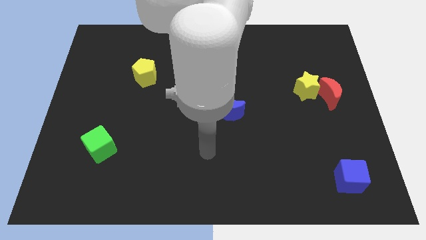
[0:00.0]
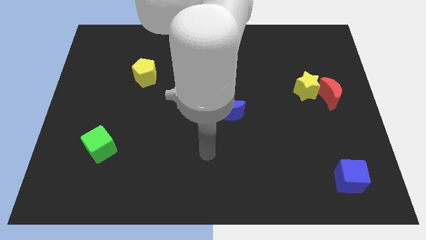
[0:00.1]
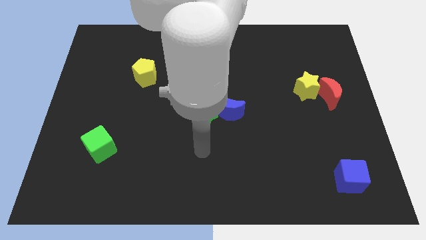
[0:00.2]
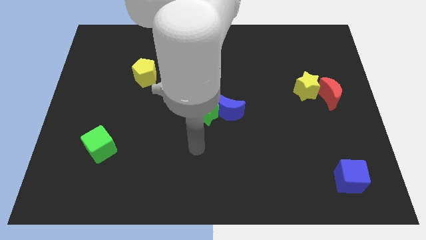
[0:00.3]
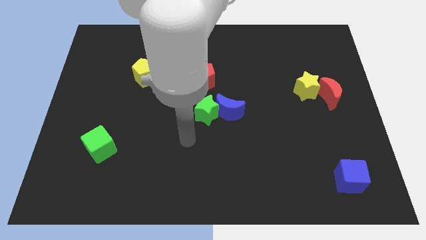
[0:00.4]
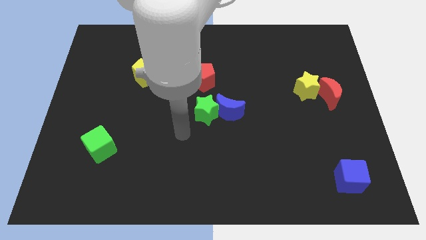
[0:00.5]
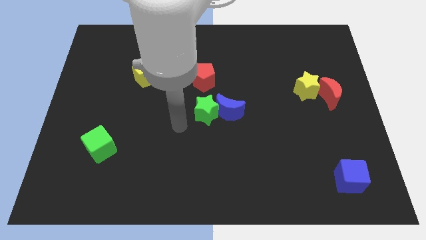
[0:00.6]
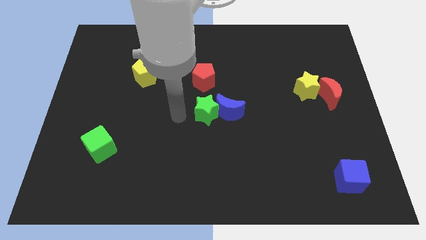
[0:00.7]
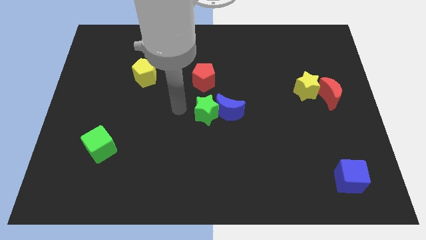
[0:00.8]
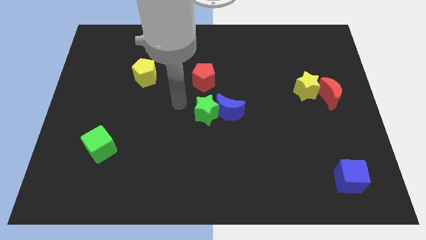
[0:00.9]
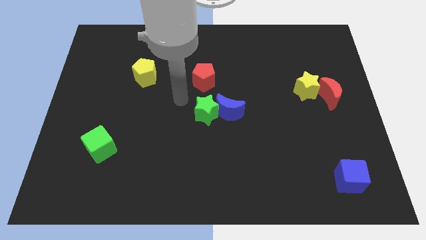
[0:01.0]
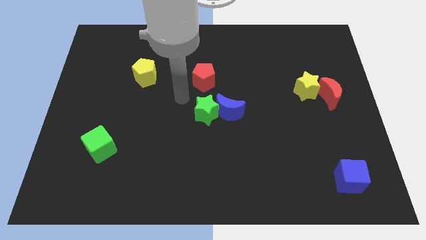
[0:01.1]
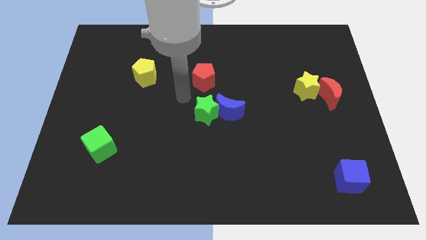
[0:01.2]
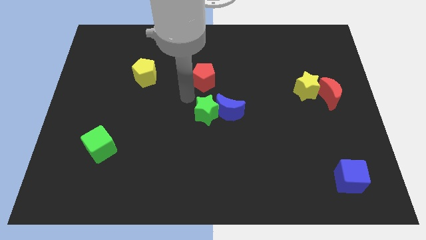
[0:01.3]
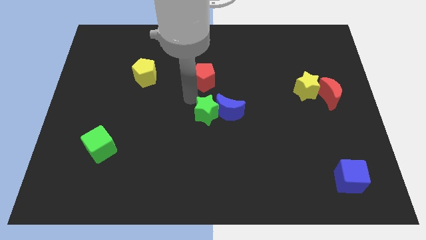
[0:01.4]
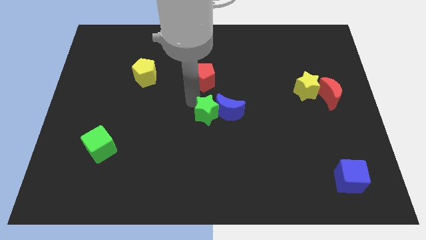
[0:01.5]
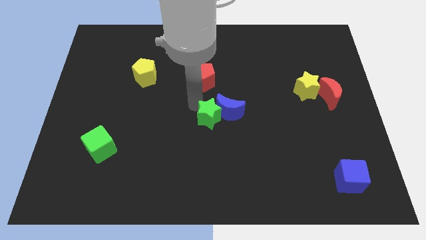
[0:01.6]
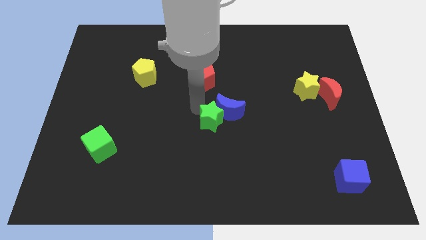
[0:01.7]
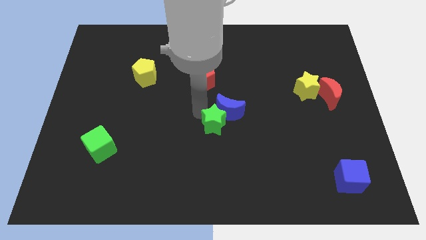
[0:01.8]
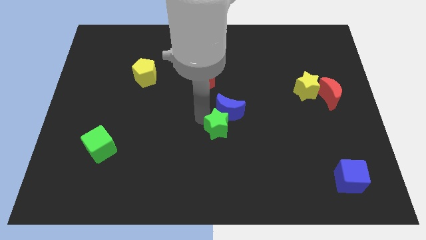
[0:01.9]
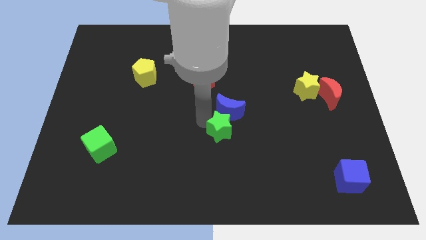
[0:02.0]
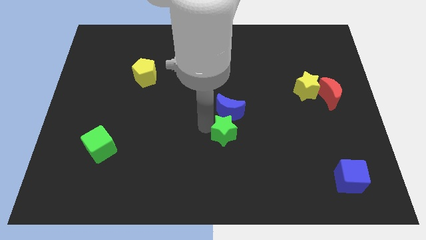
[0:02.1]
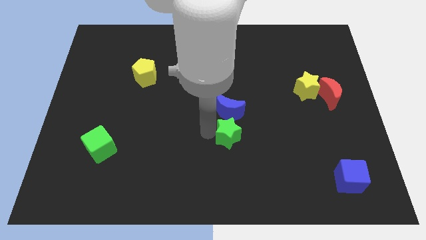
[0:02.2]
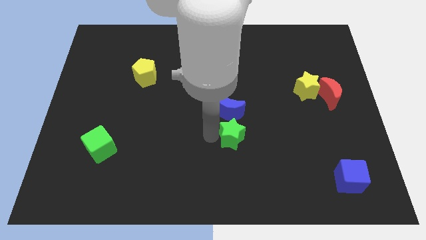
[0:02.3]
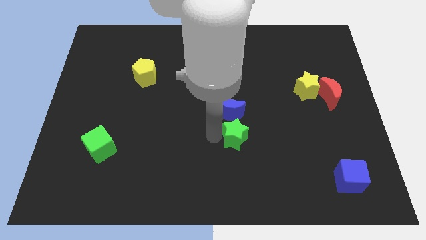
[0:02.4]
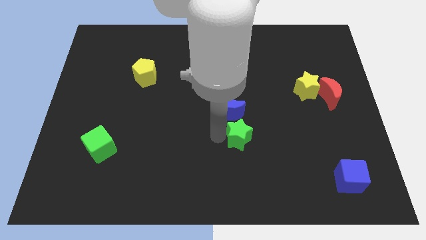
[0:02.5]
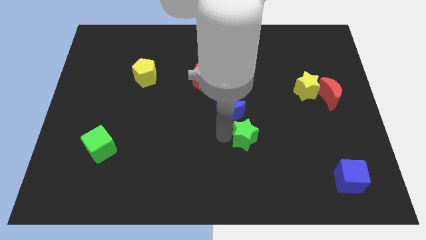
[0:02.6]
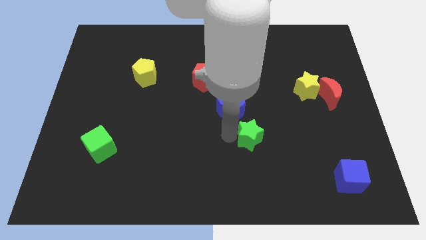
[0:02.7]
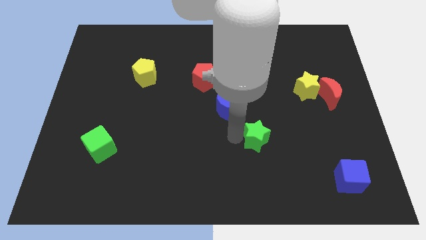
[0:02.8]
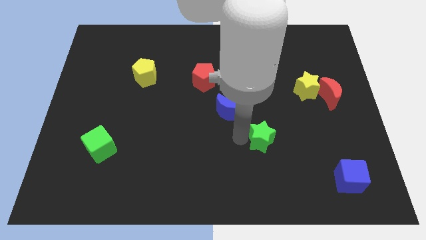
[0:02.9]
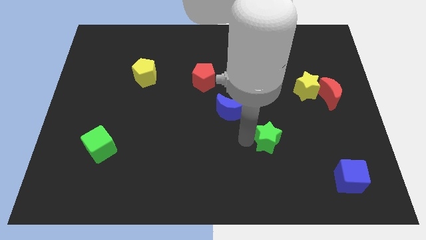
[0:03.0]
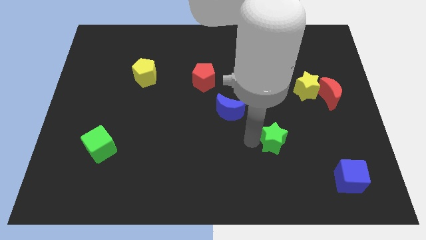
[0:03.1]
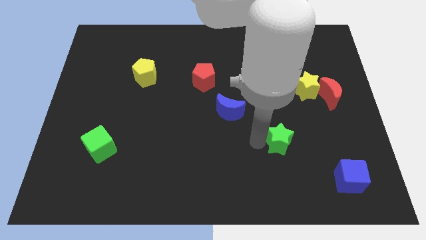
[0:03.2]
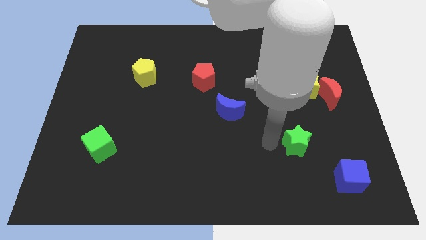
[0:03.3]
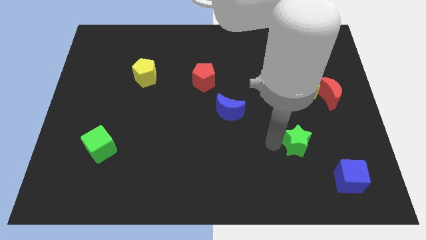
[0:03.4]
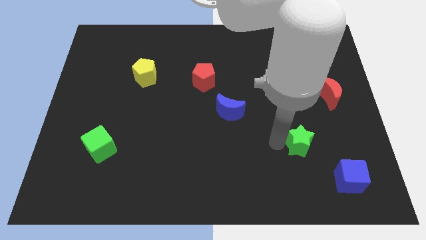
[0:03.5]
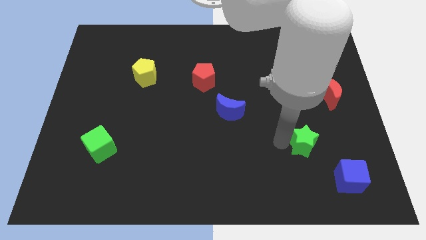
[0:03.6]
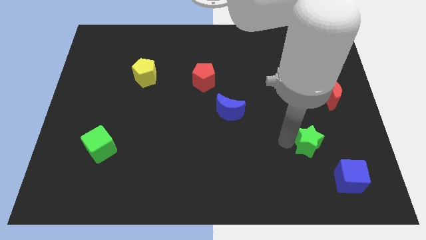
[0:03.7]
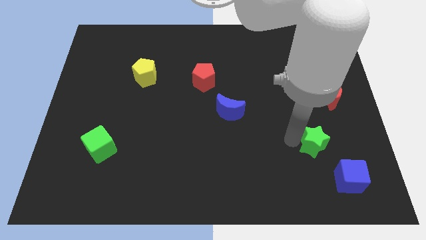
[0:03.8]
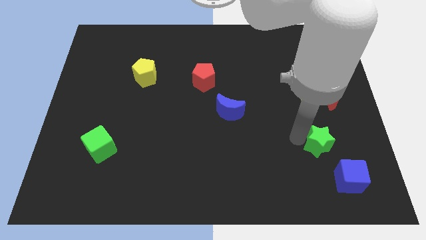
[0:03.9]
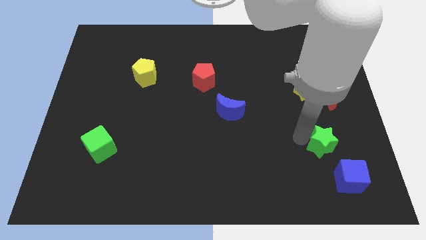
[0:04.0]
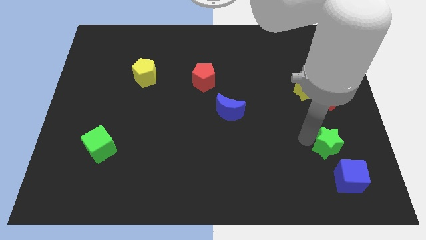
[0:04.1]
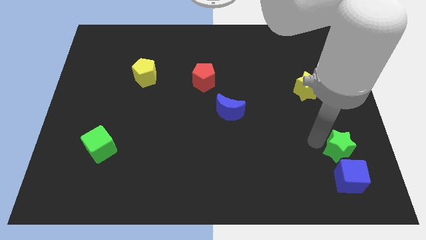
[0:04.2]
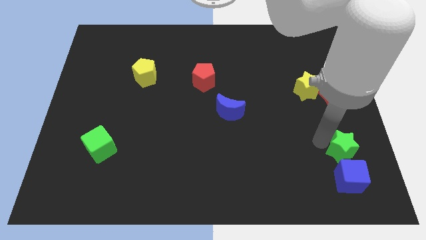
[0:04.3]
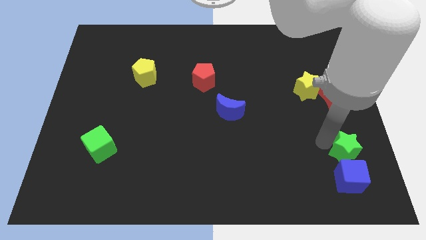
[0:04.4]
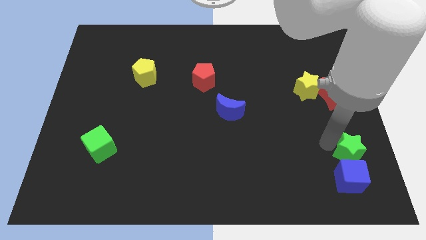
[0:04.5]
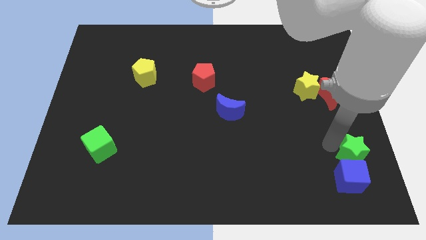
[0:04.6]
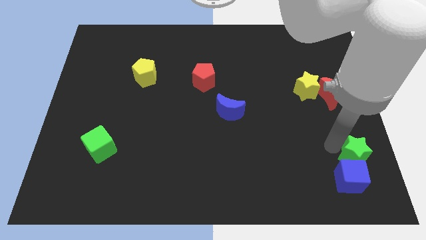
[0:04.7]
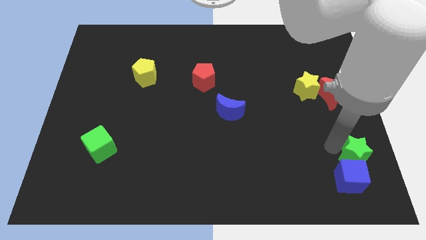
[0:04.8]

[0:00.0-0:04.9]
slide the green star to the blue cube

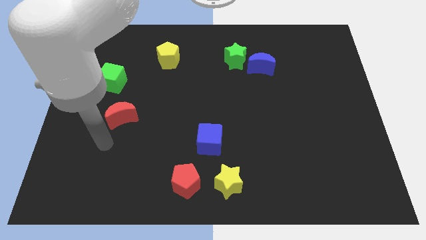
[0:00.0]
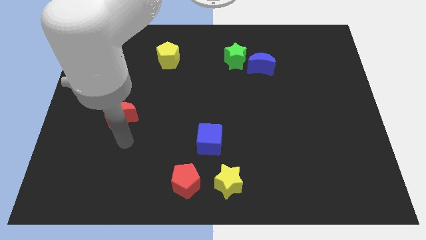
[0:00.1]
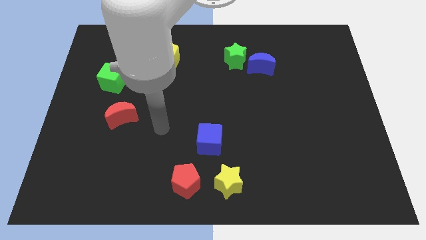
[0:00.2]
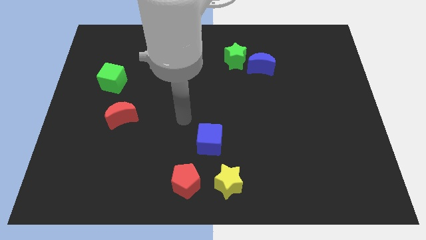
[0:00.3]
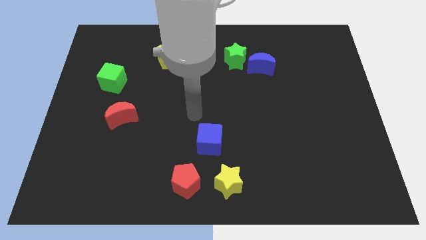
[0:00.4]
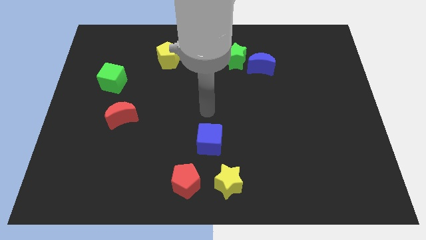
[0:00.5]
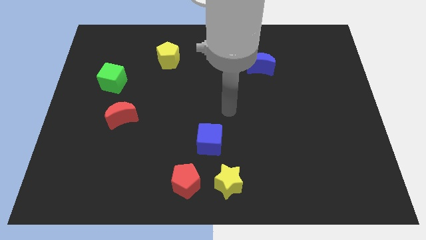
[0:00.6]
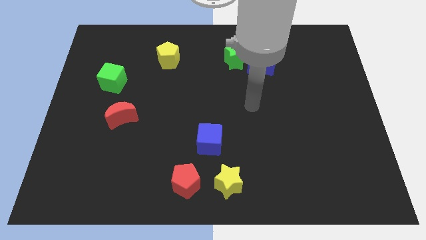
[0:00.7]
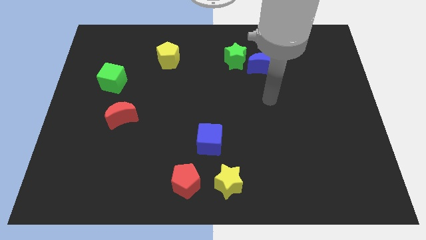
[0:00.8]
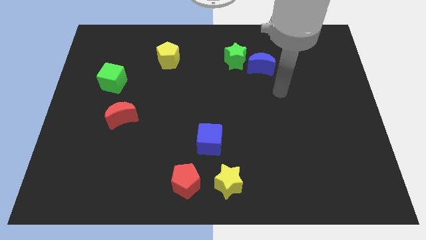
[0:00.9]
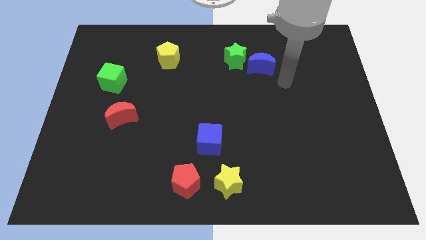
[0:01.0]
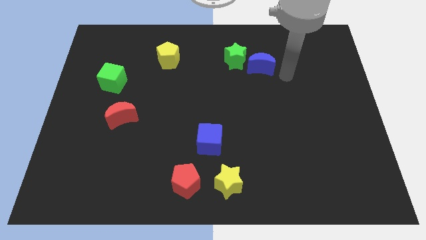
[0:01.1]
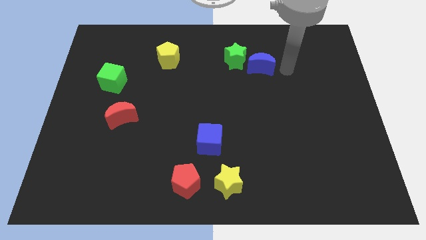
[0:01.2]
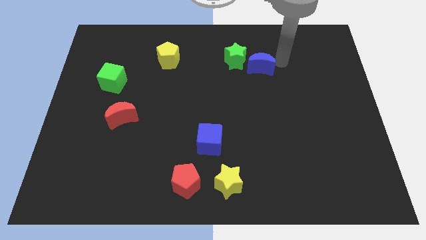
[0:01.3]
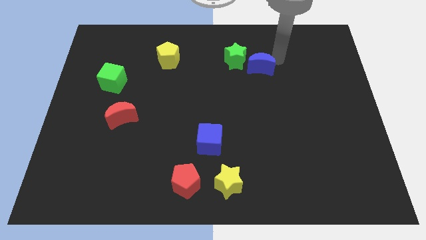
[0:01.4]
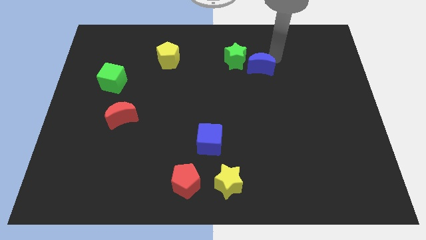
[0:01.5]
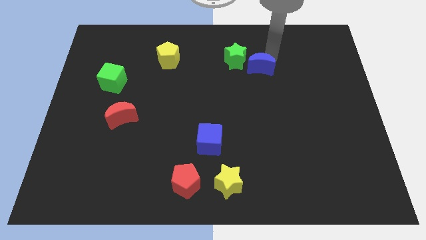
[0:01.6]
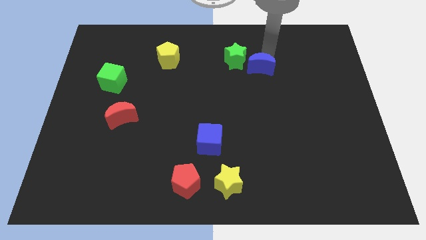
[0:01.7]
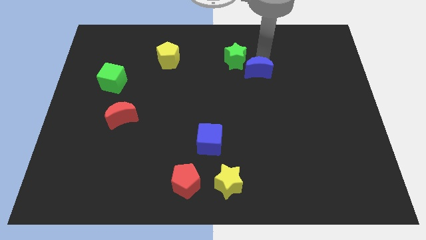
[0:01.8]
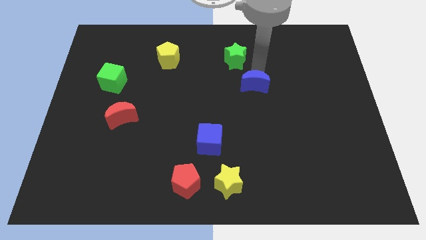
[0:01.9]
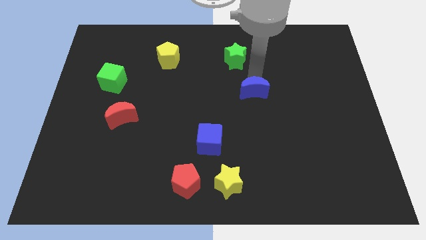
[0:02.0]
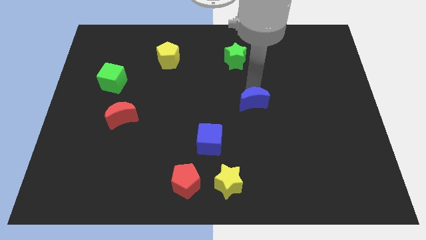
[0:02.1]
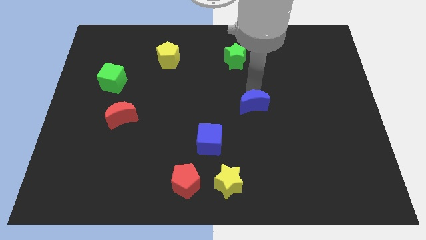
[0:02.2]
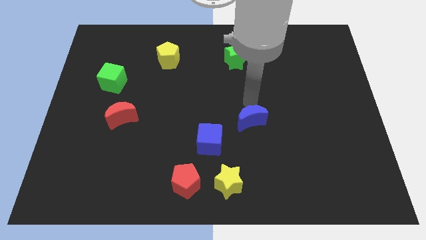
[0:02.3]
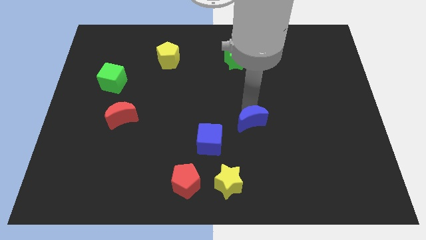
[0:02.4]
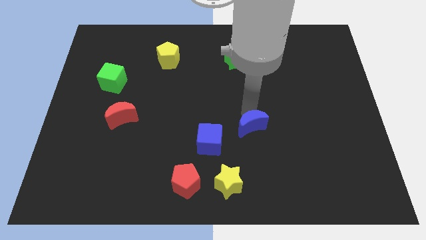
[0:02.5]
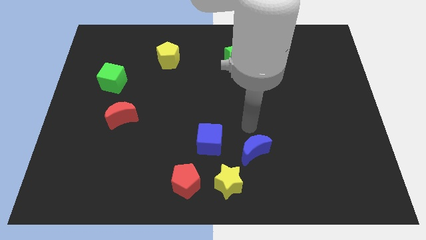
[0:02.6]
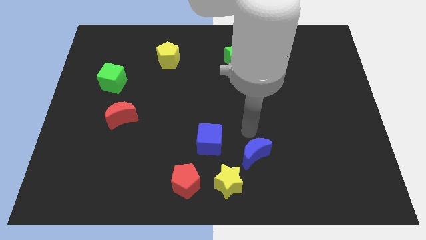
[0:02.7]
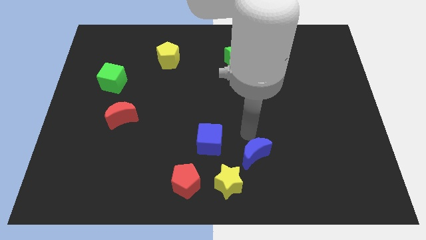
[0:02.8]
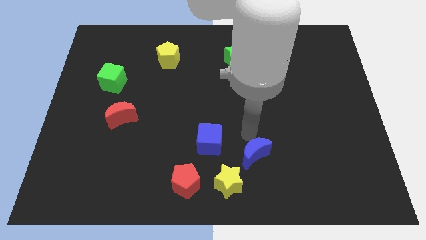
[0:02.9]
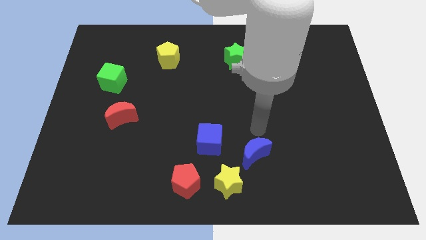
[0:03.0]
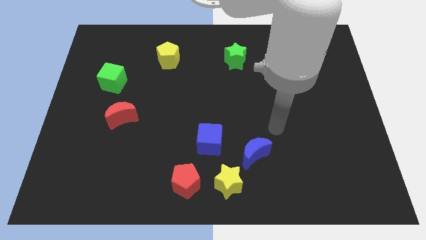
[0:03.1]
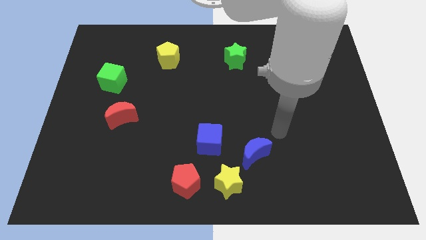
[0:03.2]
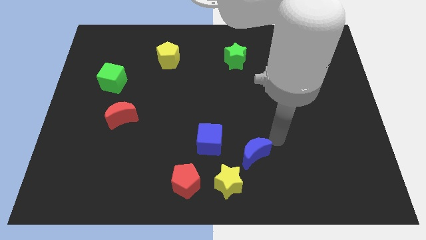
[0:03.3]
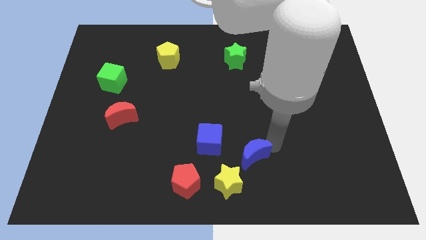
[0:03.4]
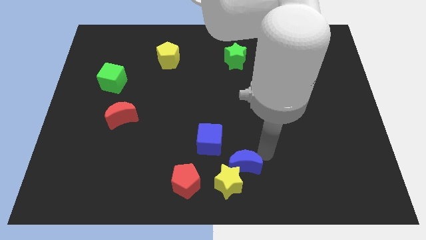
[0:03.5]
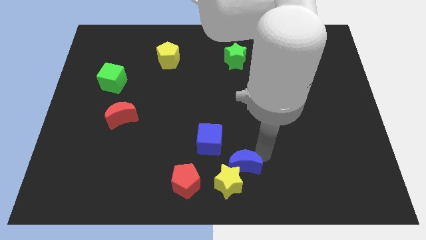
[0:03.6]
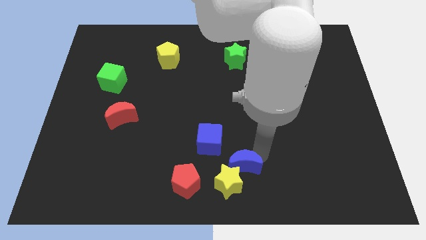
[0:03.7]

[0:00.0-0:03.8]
put the blue moon next to the yellow star
